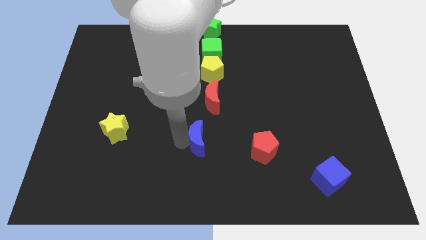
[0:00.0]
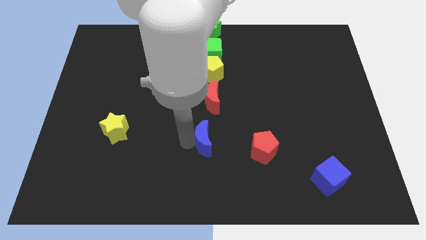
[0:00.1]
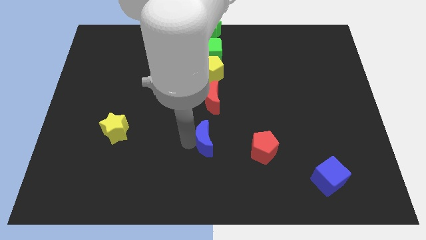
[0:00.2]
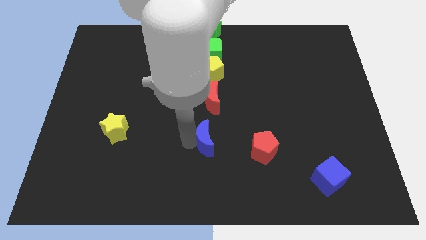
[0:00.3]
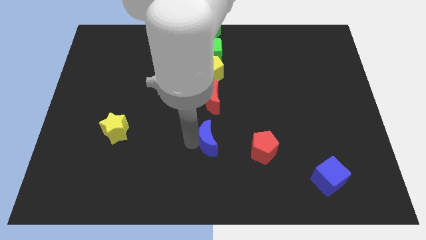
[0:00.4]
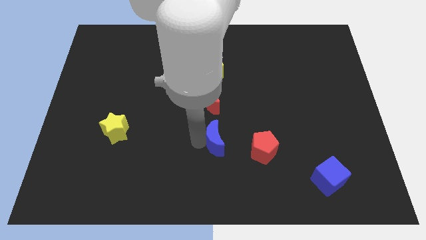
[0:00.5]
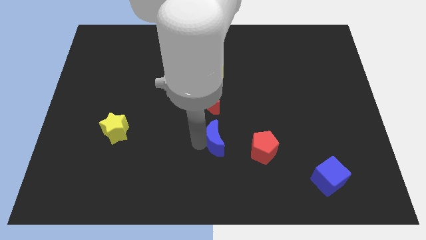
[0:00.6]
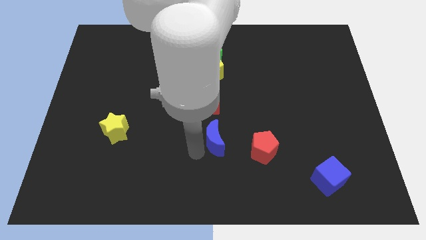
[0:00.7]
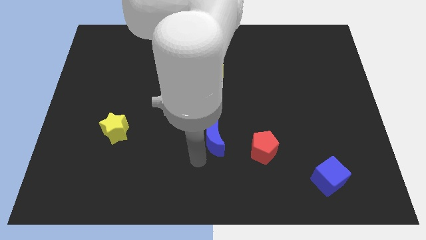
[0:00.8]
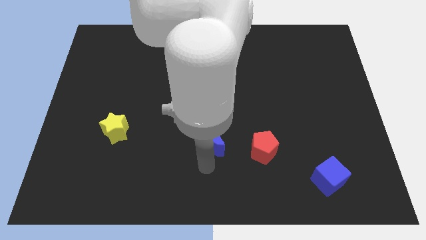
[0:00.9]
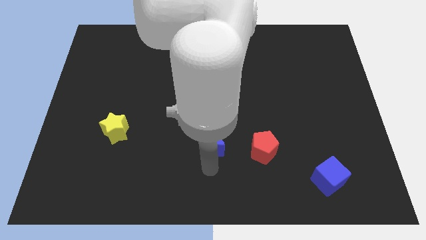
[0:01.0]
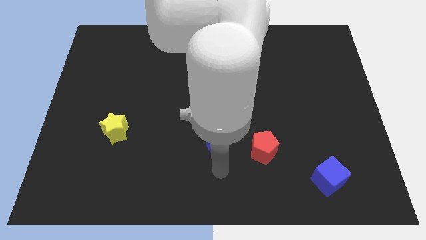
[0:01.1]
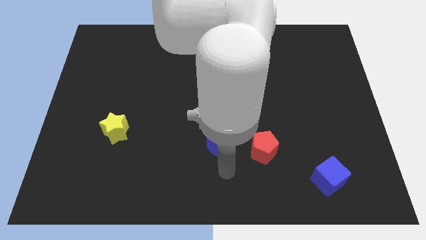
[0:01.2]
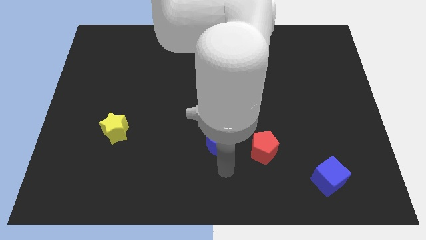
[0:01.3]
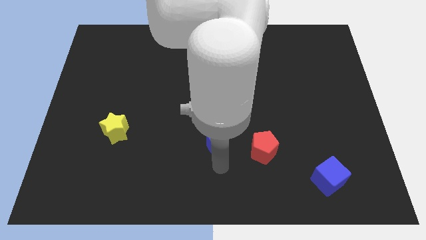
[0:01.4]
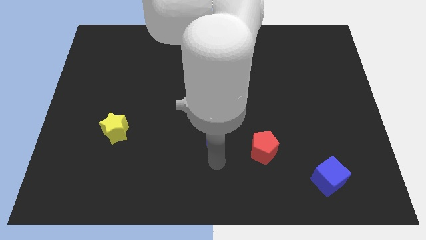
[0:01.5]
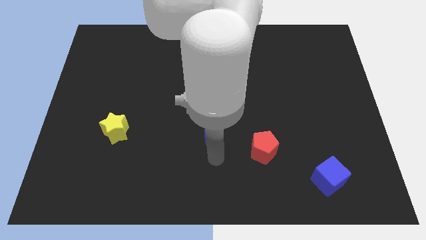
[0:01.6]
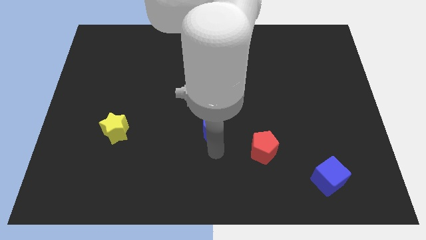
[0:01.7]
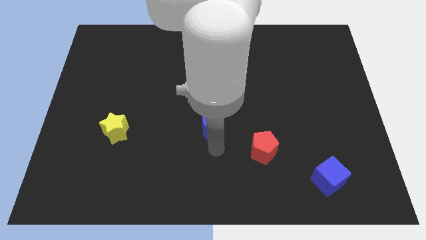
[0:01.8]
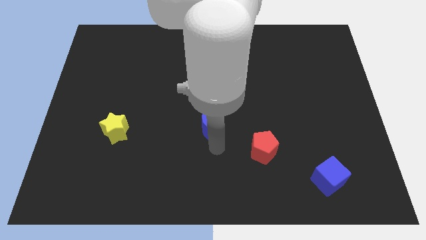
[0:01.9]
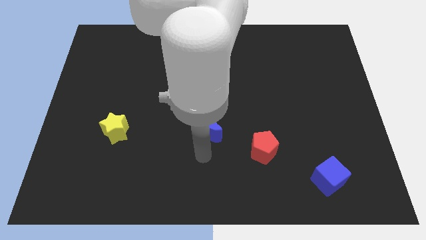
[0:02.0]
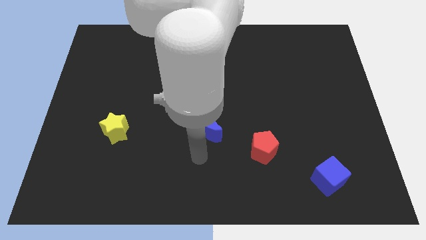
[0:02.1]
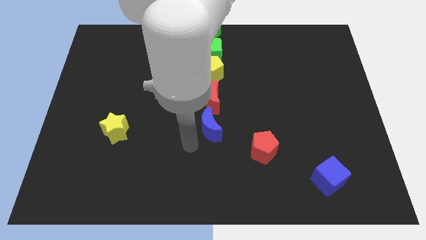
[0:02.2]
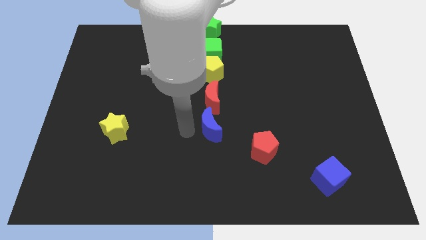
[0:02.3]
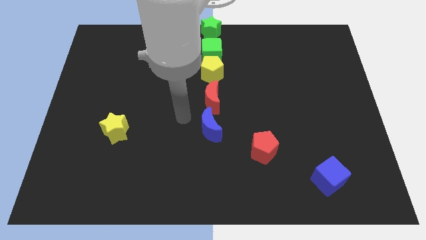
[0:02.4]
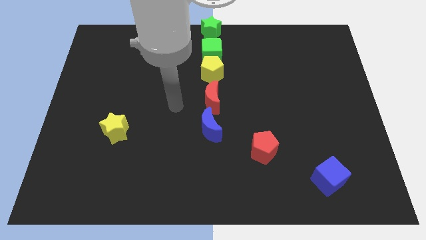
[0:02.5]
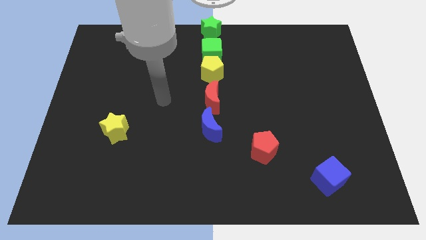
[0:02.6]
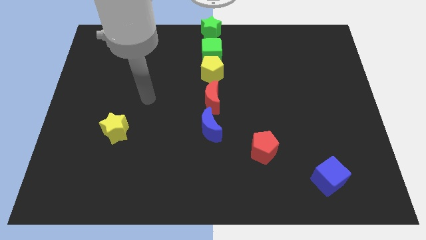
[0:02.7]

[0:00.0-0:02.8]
place the blue crescent at the bottom to make a vertical line

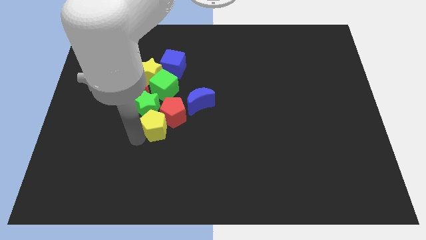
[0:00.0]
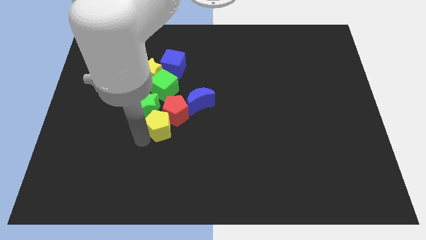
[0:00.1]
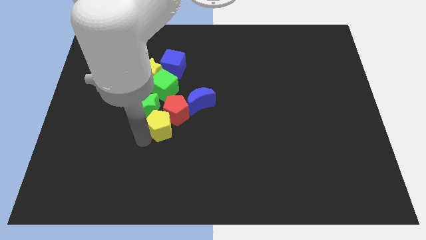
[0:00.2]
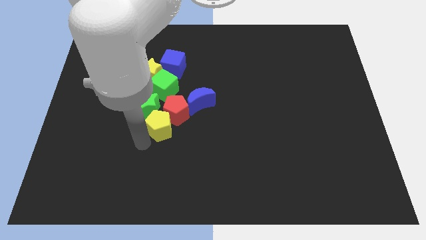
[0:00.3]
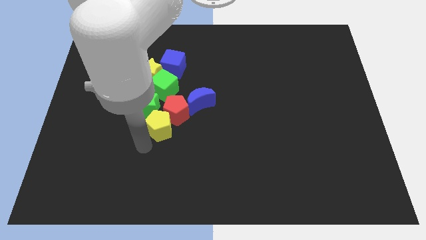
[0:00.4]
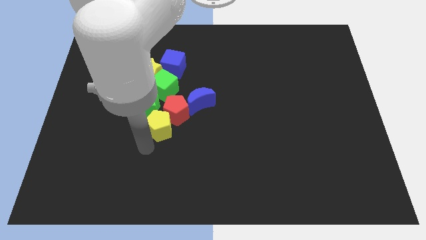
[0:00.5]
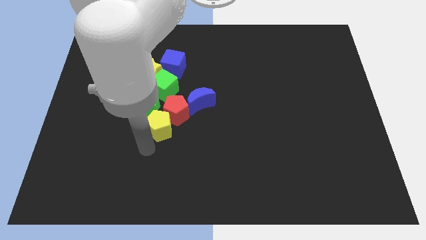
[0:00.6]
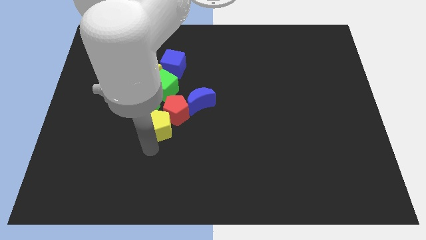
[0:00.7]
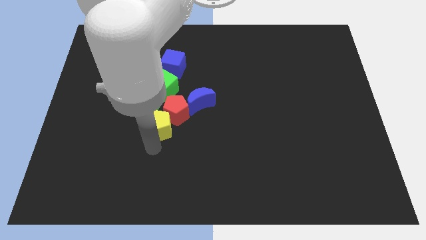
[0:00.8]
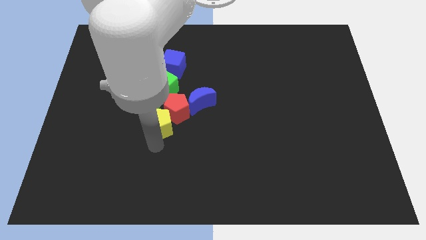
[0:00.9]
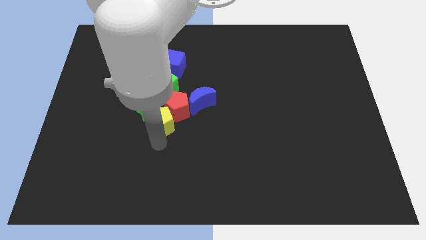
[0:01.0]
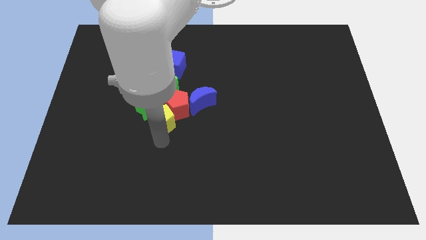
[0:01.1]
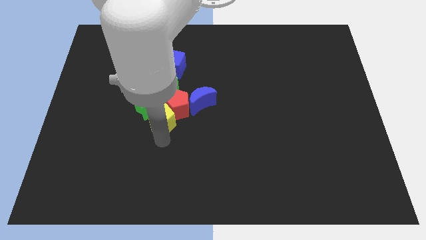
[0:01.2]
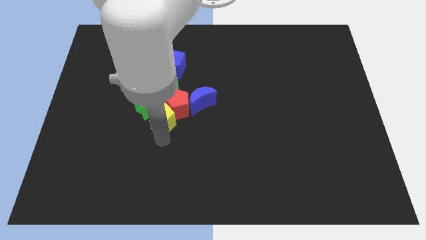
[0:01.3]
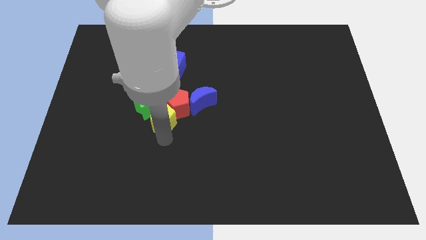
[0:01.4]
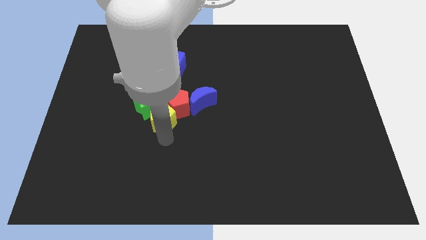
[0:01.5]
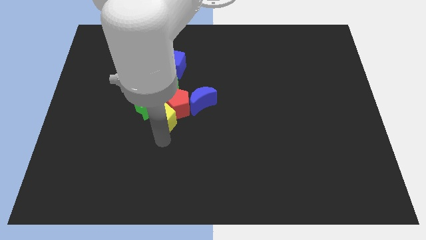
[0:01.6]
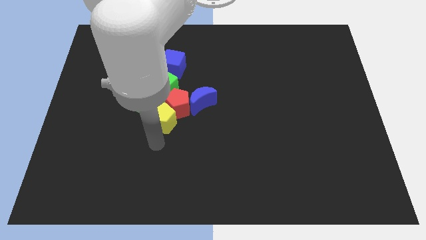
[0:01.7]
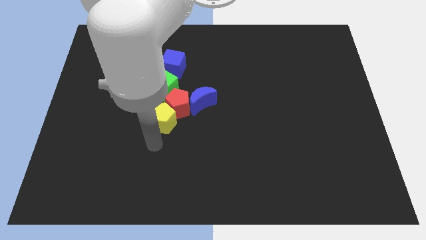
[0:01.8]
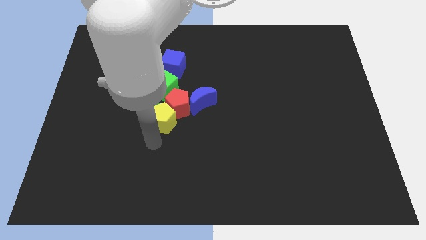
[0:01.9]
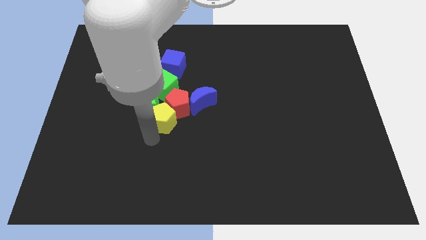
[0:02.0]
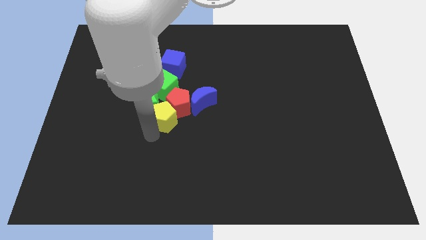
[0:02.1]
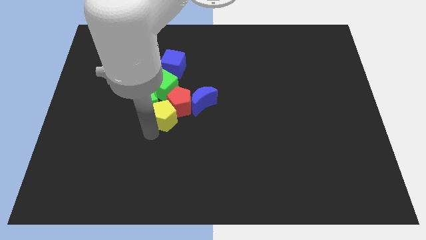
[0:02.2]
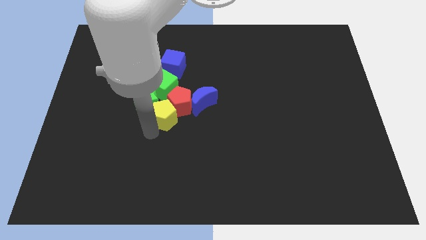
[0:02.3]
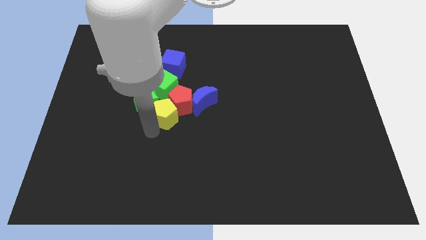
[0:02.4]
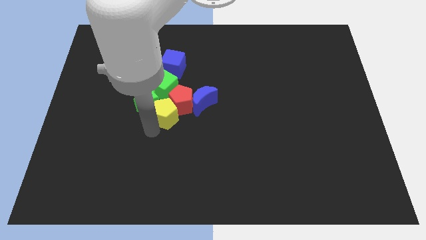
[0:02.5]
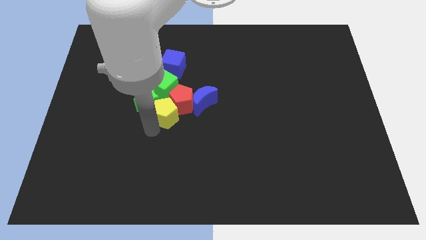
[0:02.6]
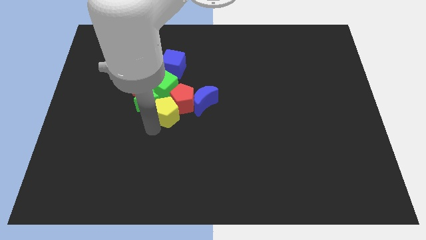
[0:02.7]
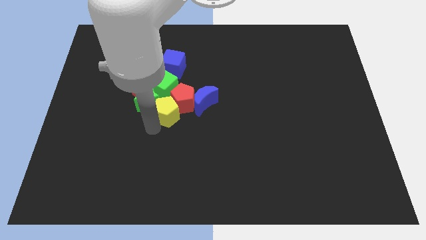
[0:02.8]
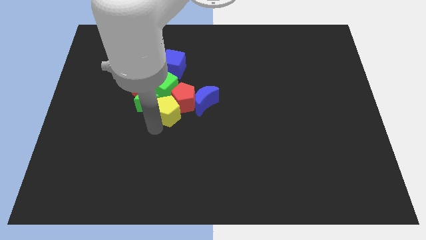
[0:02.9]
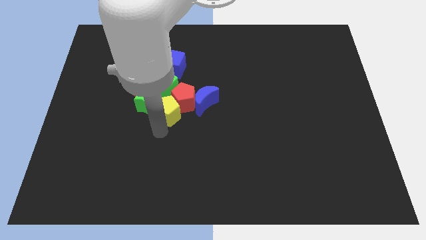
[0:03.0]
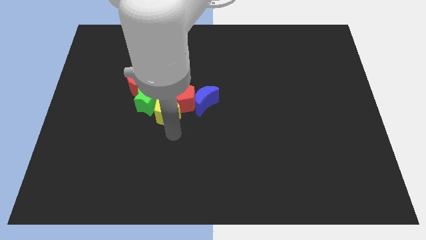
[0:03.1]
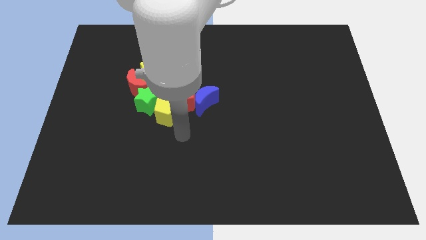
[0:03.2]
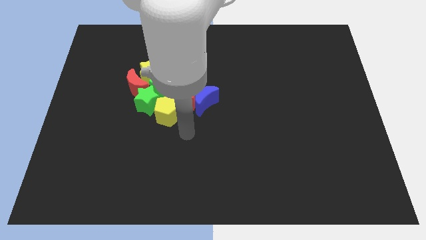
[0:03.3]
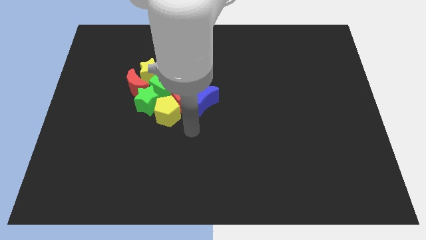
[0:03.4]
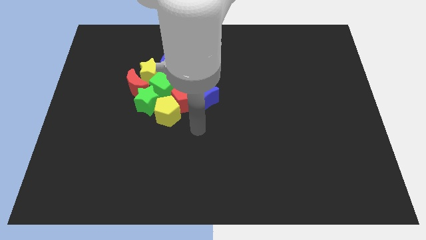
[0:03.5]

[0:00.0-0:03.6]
push yellow pentagon into red pentagon

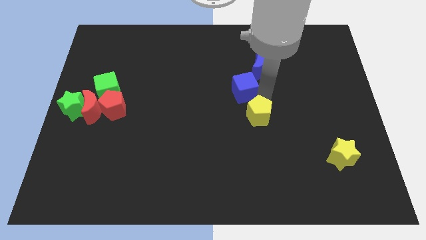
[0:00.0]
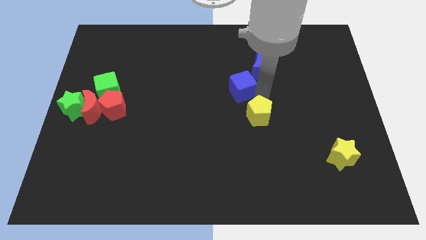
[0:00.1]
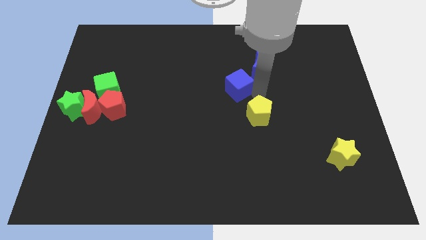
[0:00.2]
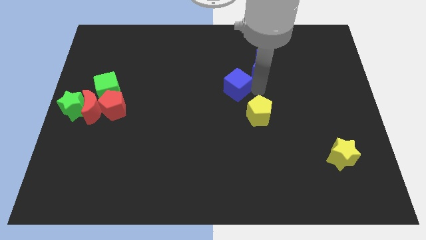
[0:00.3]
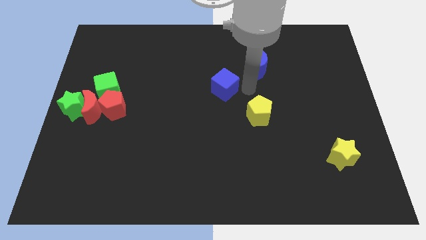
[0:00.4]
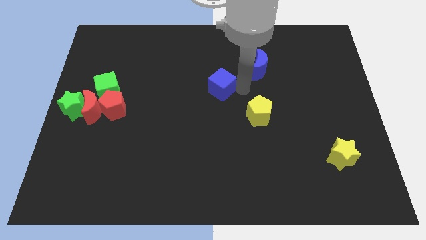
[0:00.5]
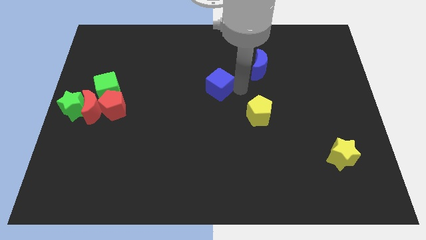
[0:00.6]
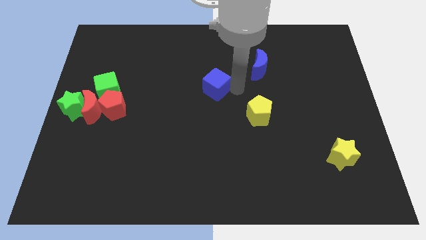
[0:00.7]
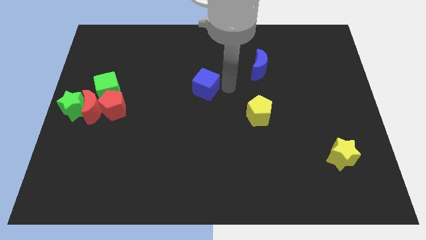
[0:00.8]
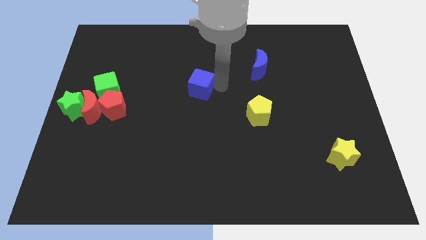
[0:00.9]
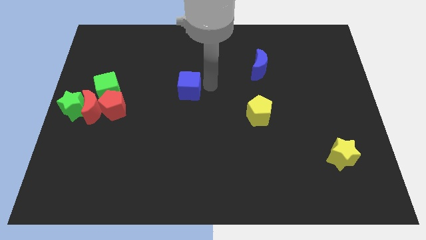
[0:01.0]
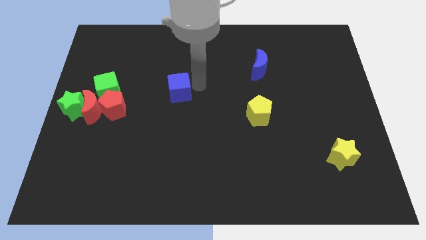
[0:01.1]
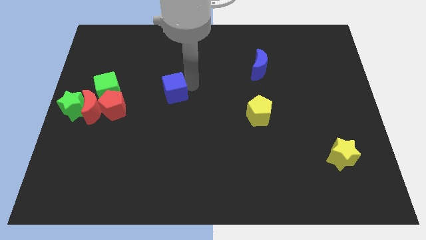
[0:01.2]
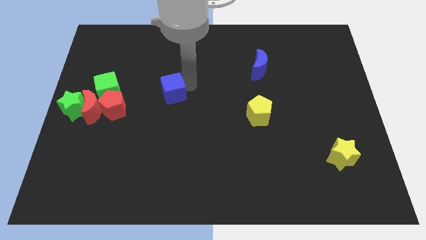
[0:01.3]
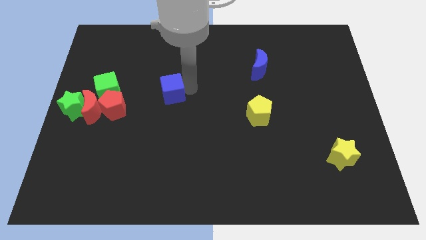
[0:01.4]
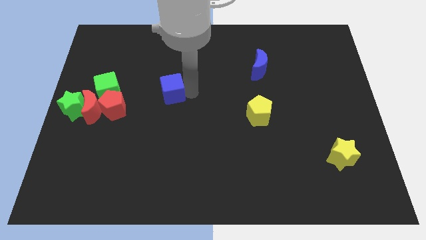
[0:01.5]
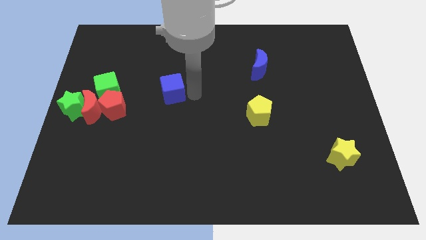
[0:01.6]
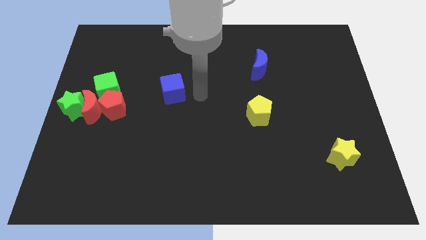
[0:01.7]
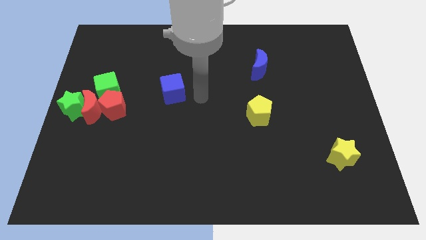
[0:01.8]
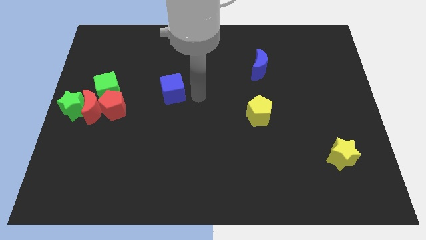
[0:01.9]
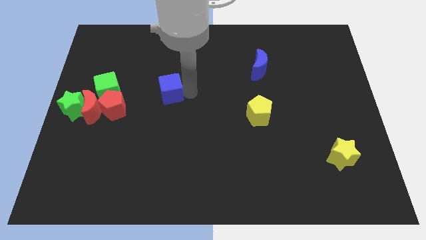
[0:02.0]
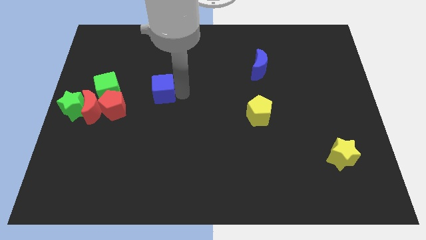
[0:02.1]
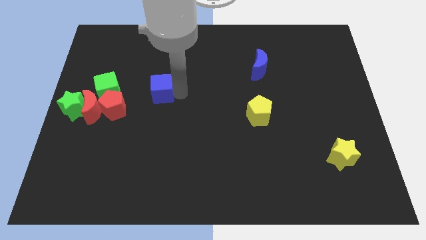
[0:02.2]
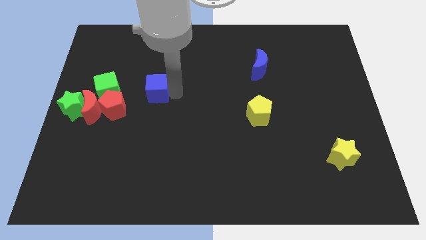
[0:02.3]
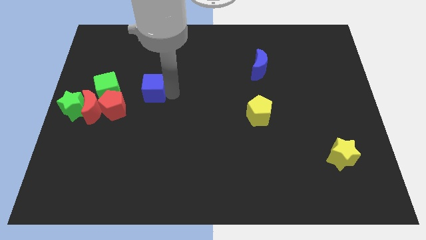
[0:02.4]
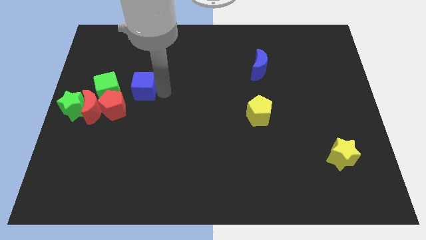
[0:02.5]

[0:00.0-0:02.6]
push the blue cube to the right of the green cube
